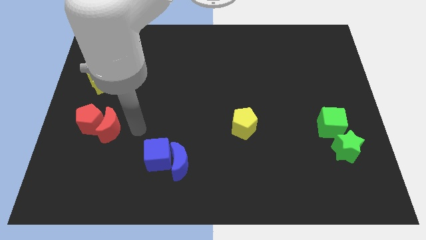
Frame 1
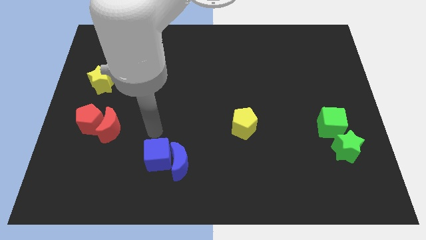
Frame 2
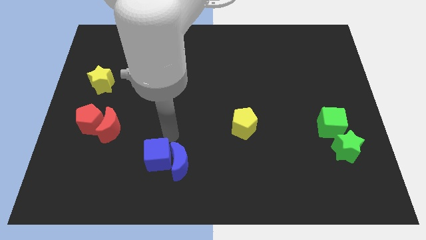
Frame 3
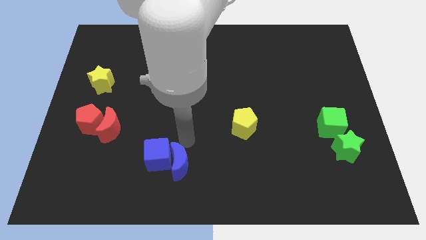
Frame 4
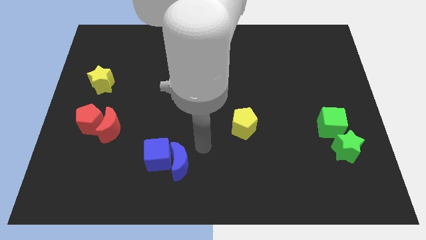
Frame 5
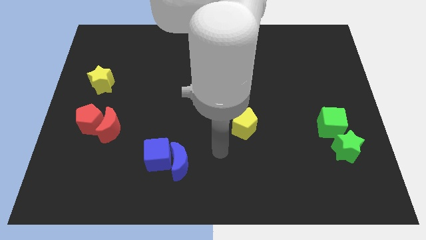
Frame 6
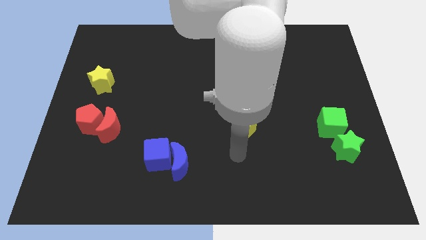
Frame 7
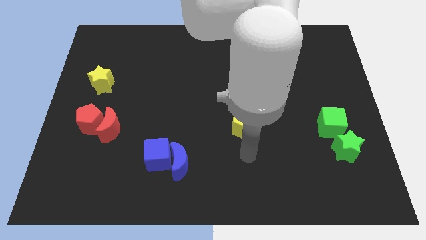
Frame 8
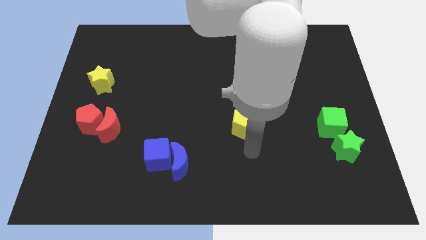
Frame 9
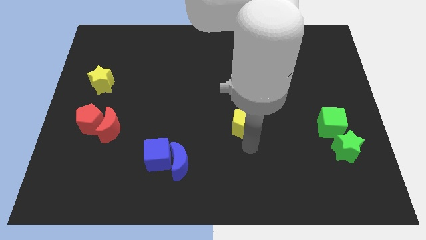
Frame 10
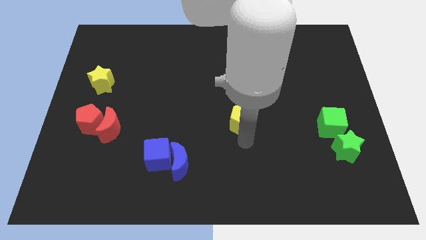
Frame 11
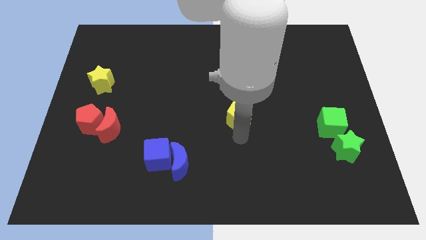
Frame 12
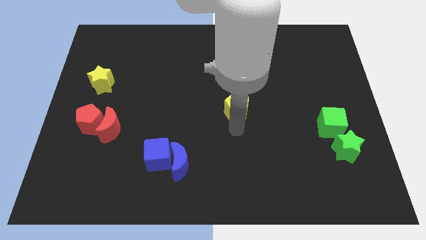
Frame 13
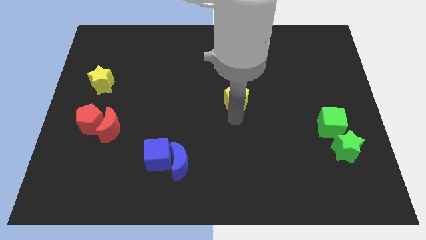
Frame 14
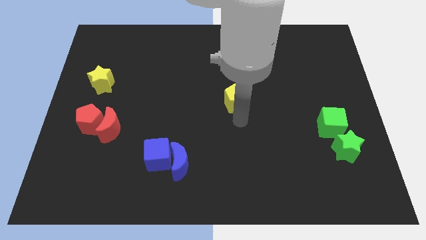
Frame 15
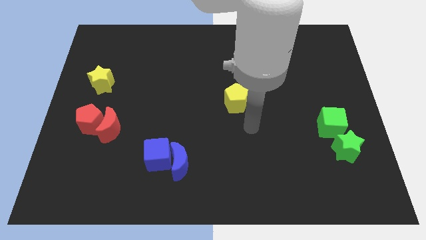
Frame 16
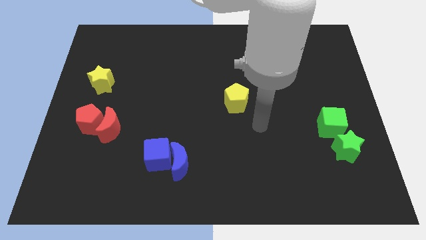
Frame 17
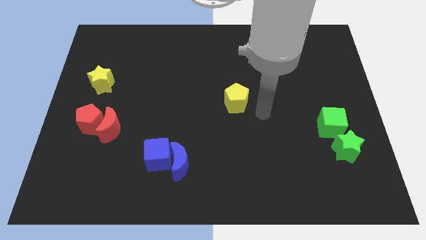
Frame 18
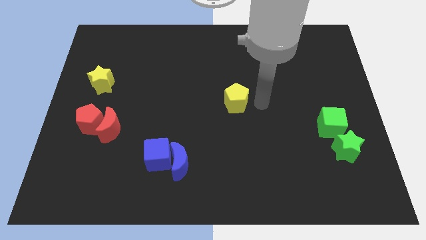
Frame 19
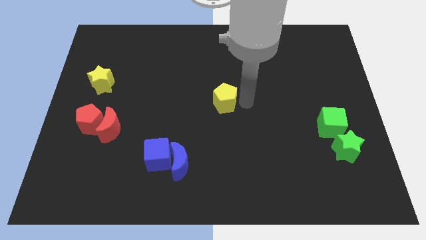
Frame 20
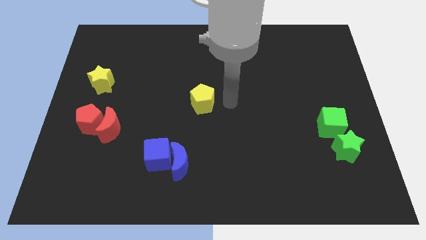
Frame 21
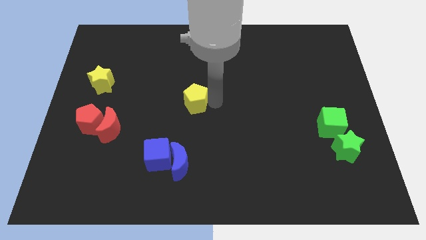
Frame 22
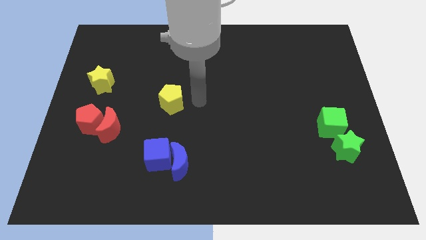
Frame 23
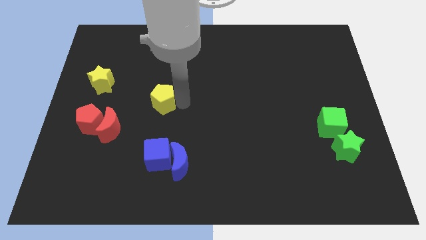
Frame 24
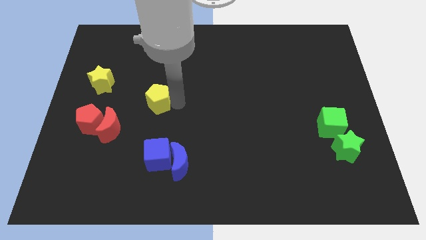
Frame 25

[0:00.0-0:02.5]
place the yellow pentagon right diagonally towards red pentagon

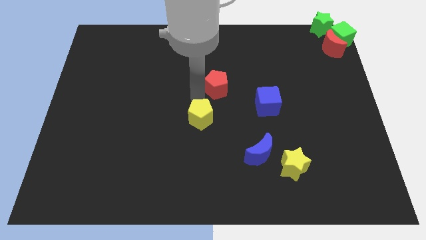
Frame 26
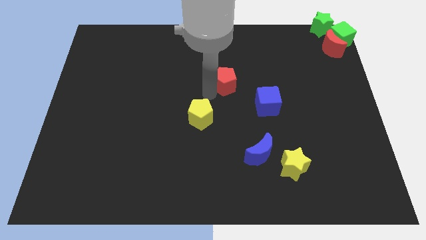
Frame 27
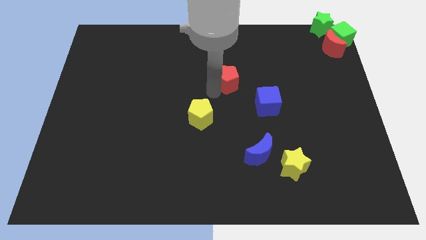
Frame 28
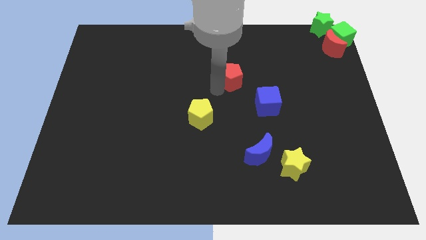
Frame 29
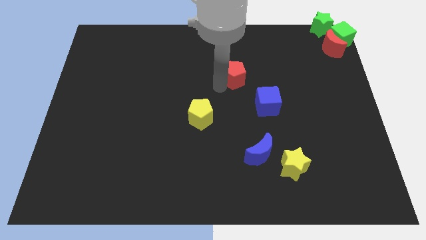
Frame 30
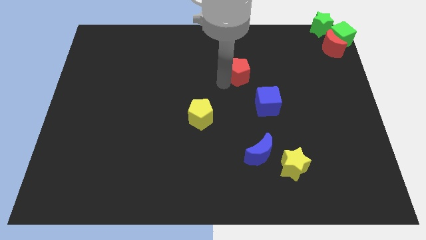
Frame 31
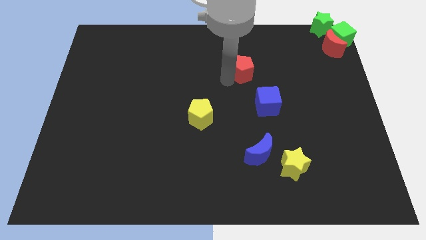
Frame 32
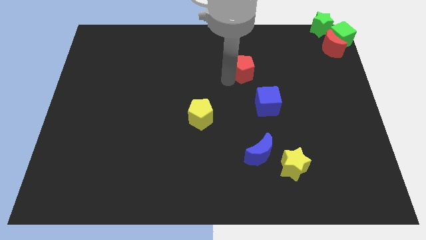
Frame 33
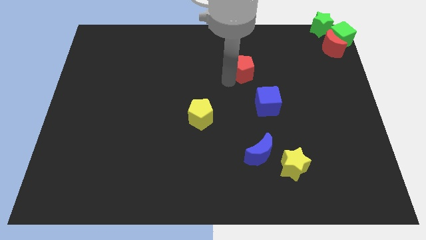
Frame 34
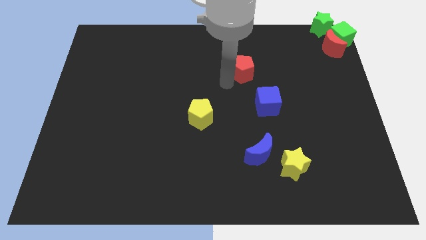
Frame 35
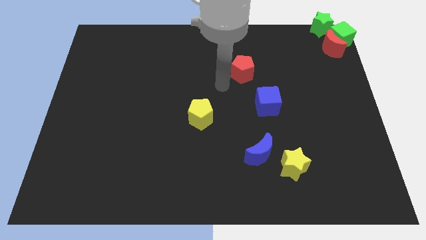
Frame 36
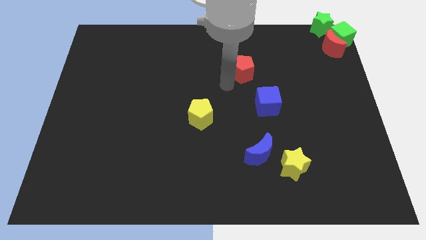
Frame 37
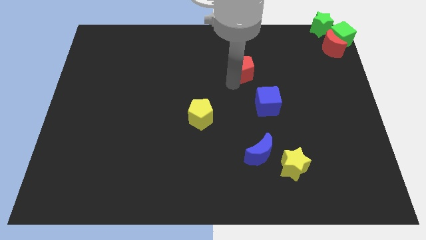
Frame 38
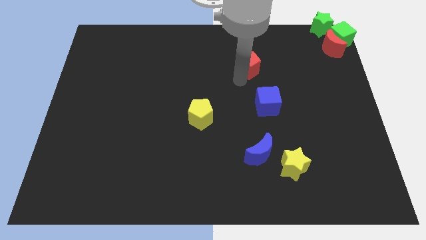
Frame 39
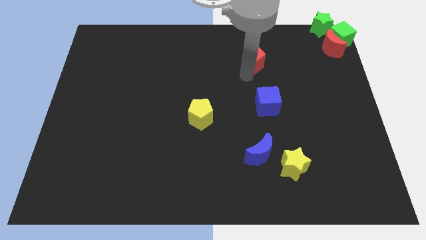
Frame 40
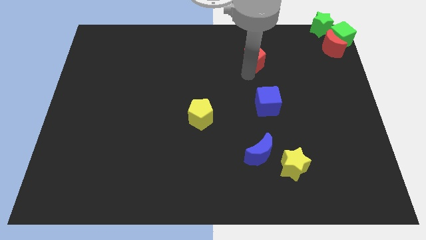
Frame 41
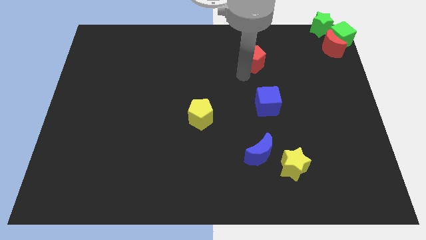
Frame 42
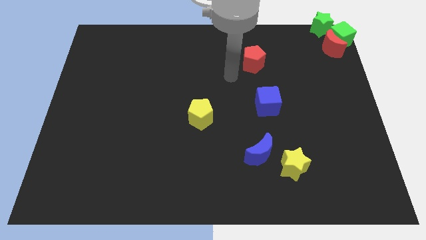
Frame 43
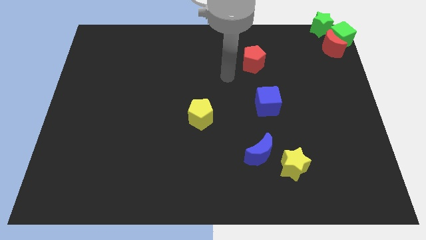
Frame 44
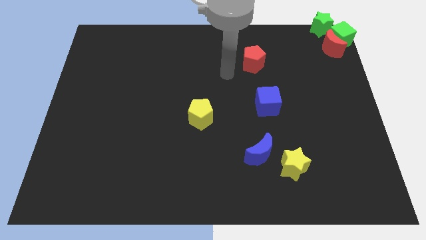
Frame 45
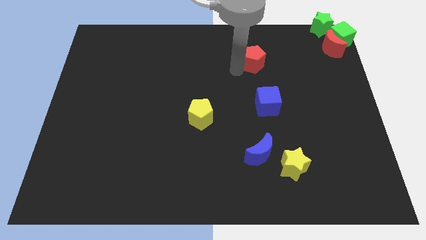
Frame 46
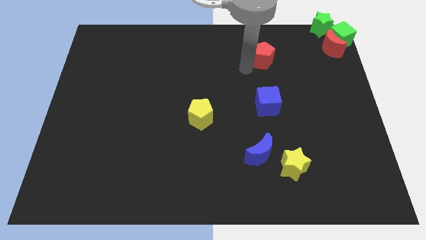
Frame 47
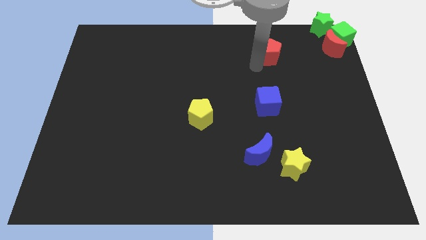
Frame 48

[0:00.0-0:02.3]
move the red pentagon to the top side of the blue cube

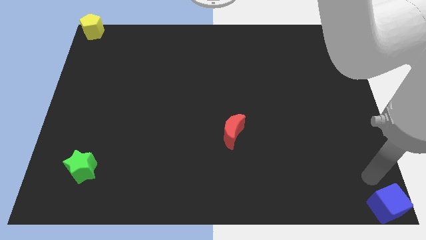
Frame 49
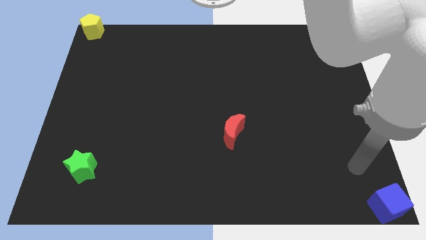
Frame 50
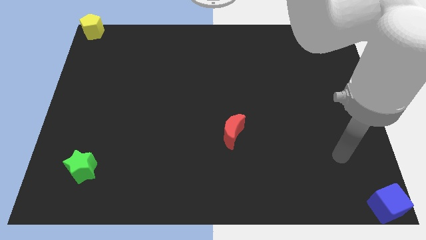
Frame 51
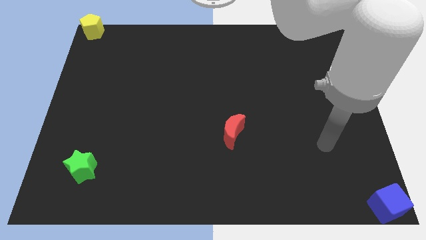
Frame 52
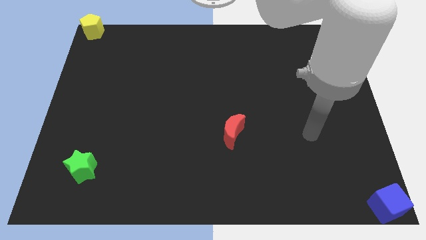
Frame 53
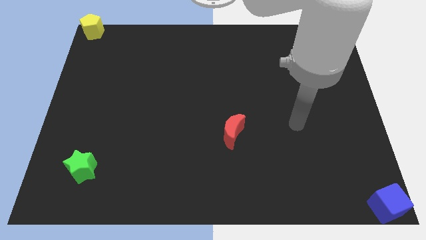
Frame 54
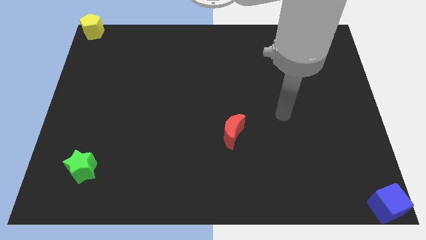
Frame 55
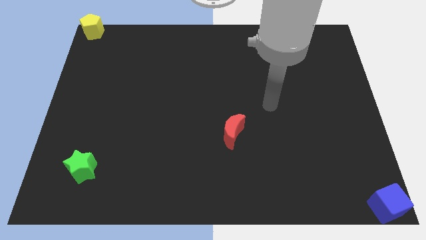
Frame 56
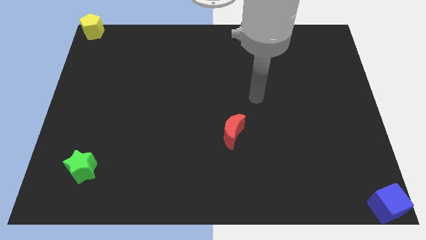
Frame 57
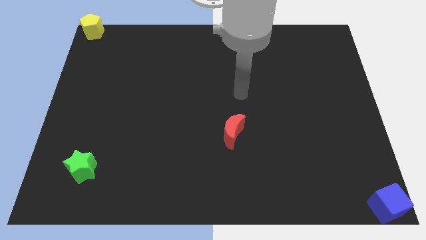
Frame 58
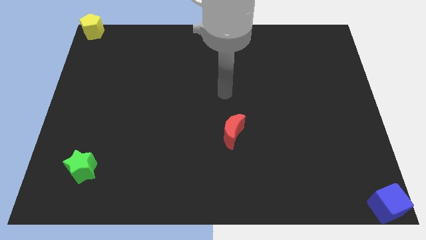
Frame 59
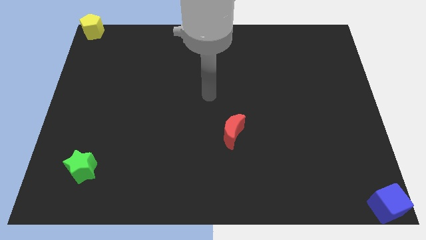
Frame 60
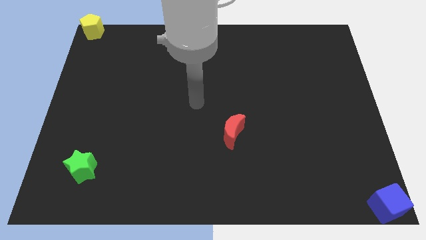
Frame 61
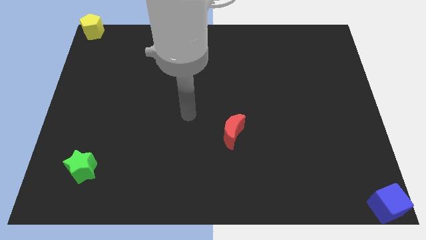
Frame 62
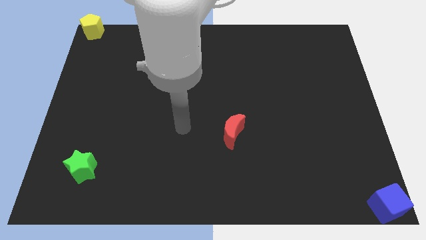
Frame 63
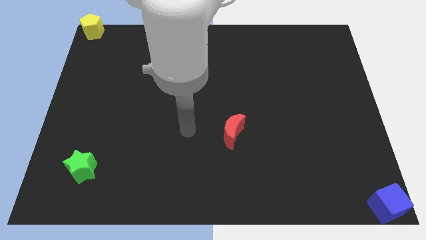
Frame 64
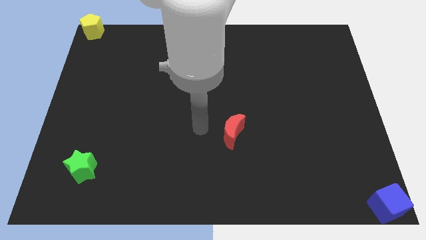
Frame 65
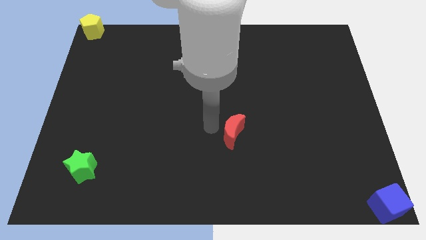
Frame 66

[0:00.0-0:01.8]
point your arm at the left side of the red moon

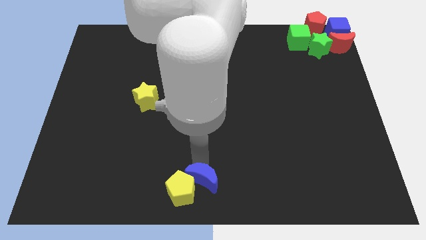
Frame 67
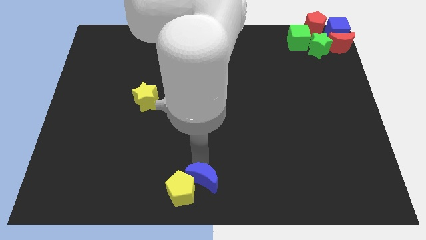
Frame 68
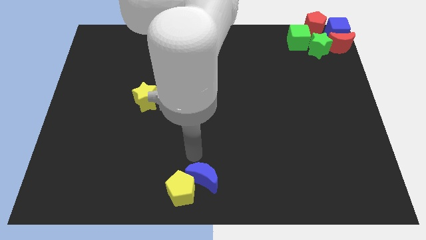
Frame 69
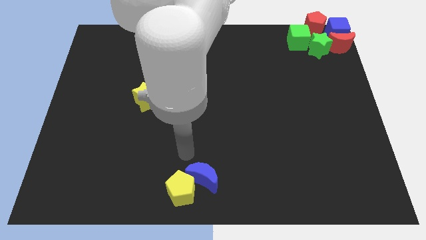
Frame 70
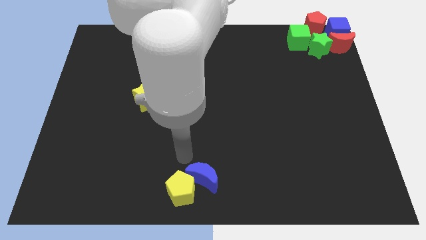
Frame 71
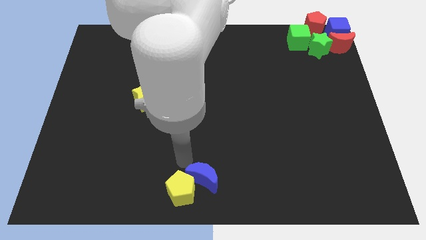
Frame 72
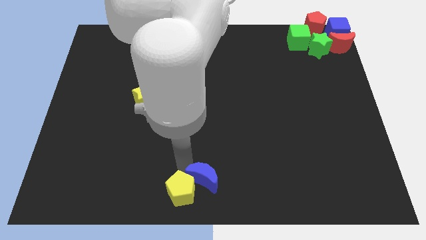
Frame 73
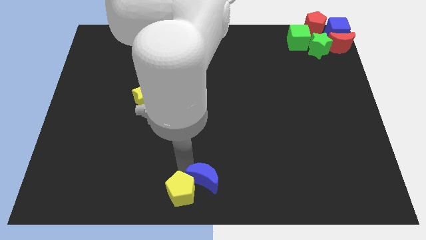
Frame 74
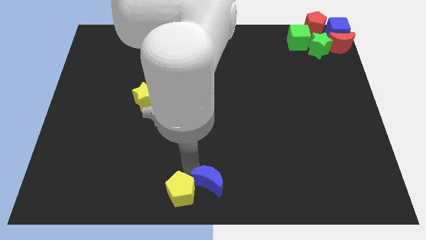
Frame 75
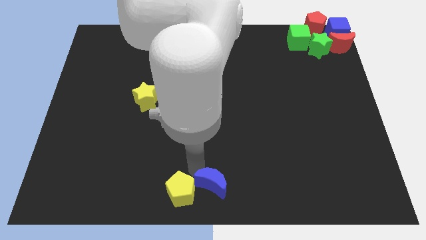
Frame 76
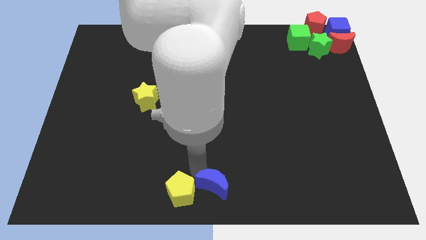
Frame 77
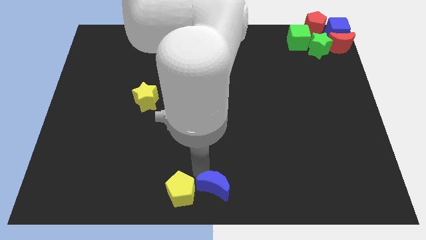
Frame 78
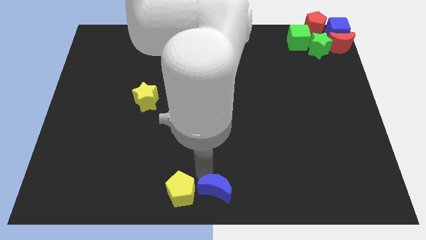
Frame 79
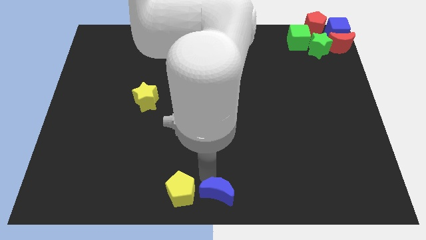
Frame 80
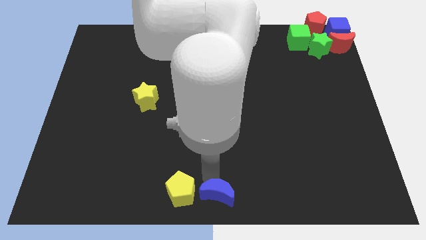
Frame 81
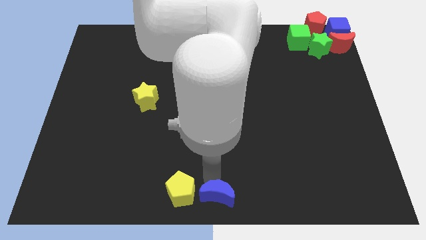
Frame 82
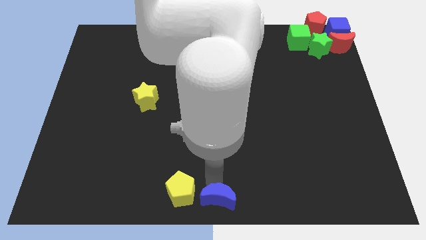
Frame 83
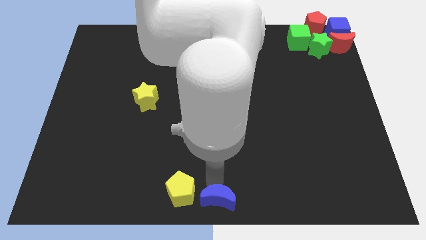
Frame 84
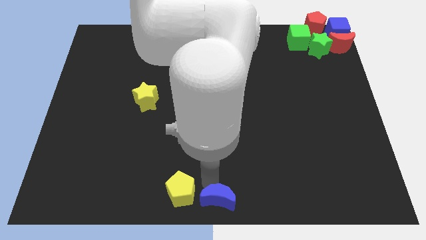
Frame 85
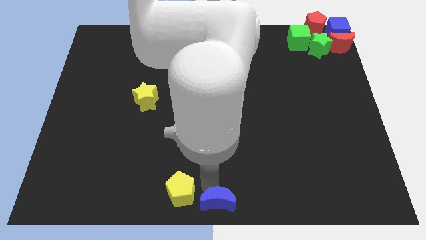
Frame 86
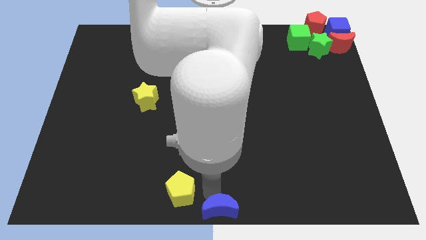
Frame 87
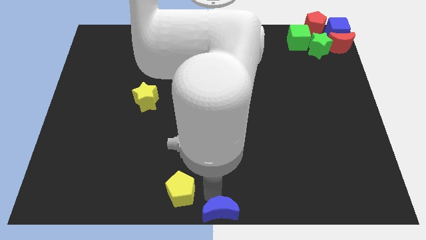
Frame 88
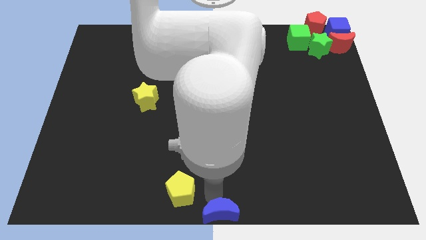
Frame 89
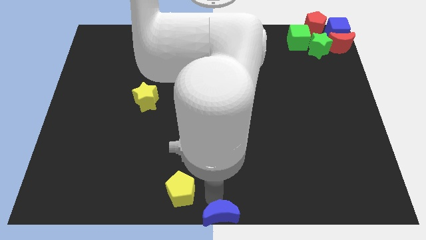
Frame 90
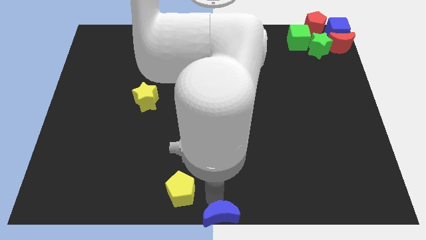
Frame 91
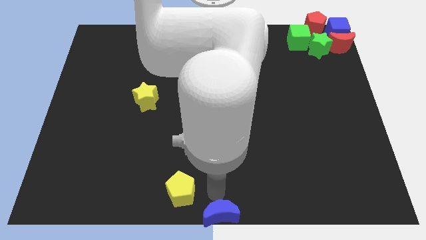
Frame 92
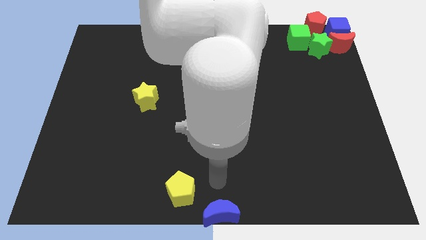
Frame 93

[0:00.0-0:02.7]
move the blue crescent bottom middle of the board
